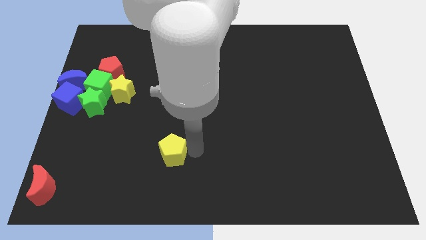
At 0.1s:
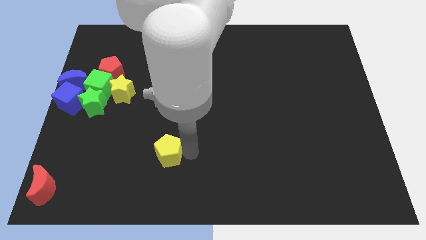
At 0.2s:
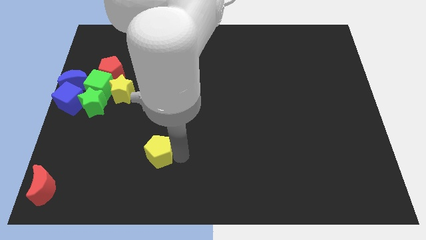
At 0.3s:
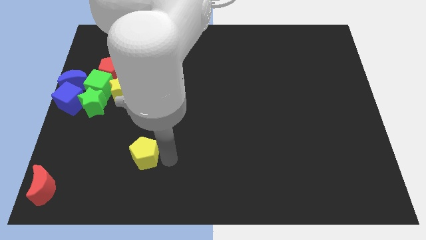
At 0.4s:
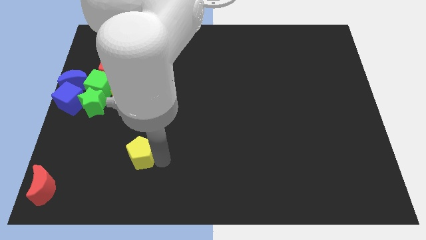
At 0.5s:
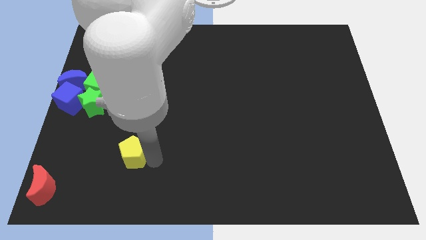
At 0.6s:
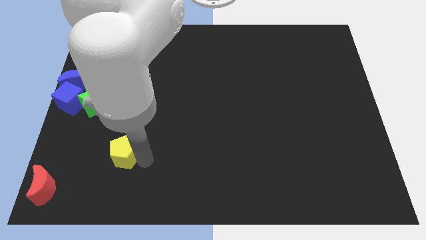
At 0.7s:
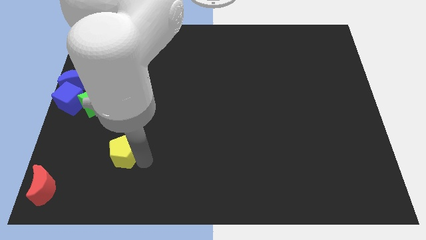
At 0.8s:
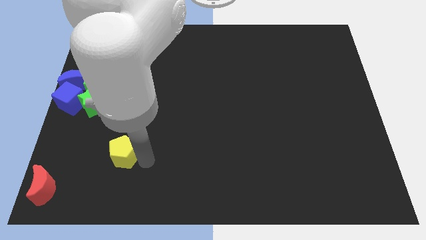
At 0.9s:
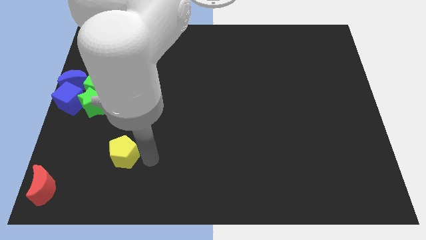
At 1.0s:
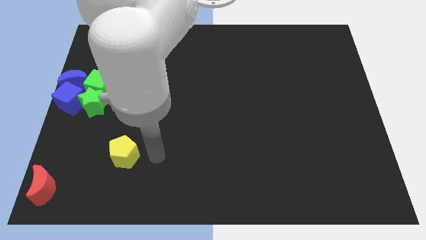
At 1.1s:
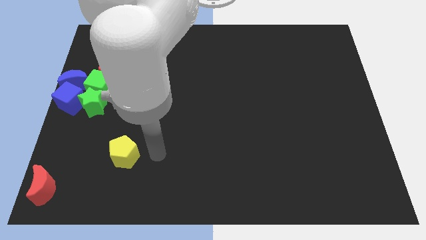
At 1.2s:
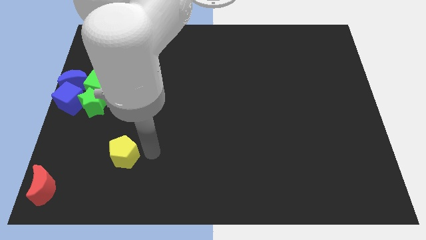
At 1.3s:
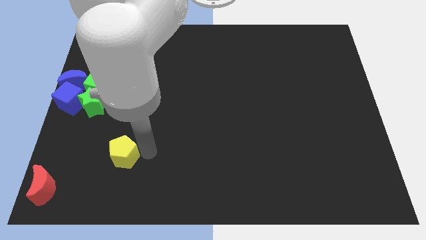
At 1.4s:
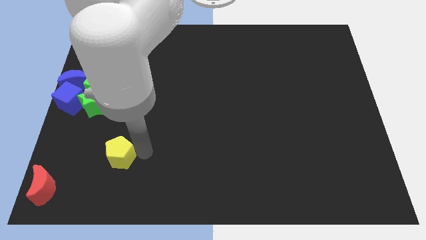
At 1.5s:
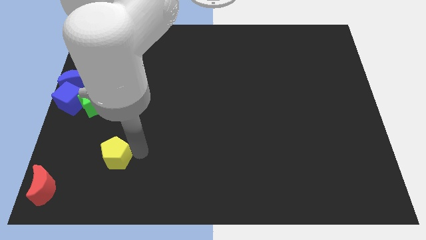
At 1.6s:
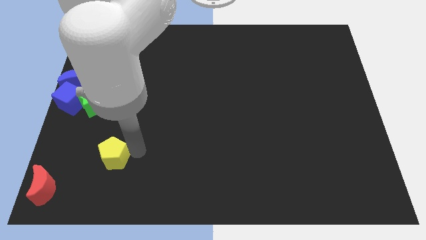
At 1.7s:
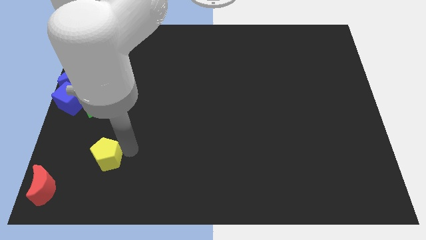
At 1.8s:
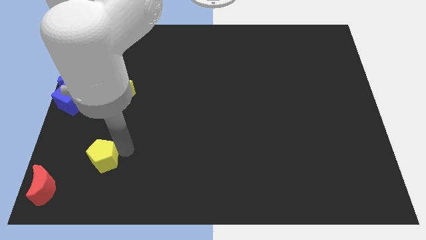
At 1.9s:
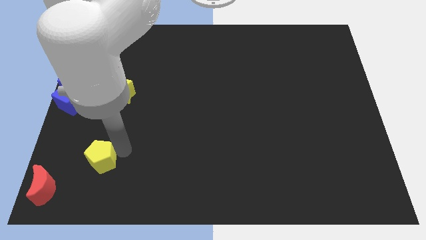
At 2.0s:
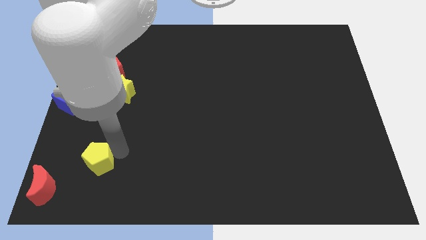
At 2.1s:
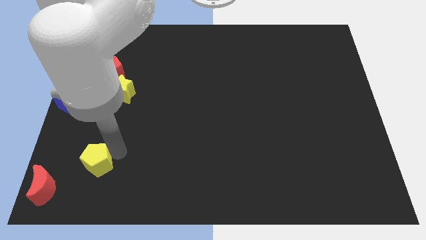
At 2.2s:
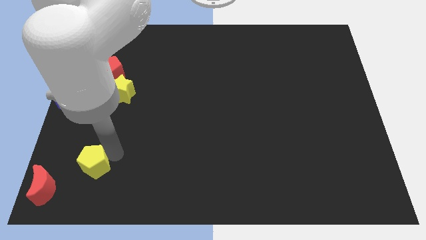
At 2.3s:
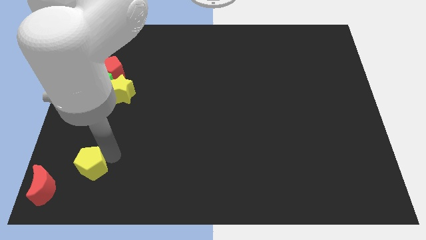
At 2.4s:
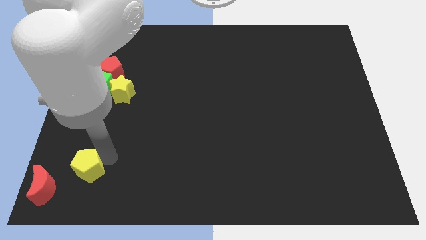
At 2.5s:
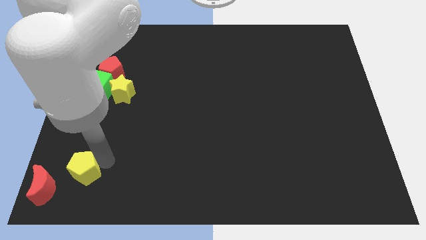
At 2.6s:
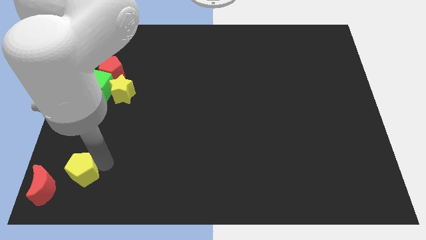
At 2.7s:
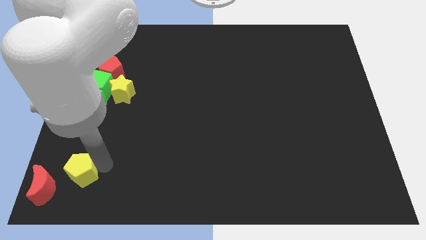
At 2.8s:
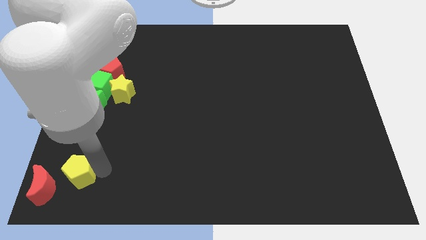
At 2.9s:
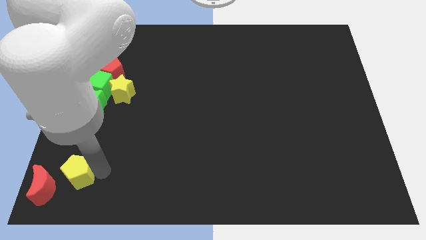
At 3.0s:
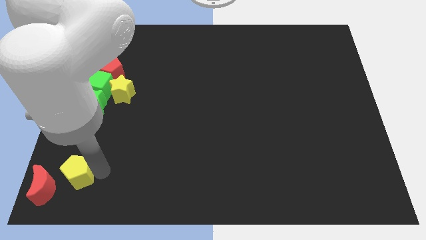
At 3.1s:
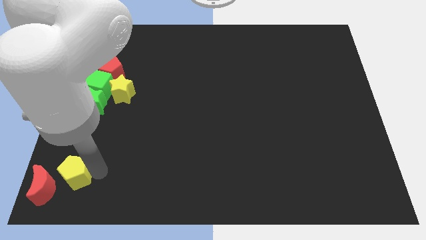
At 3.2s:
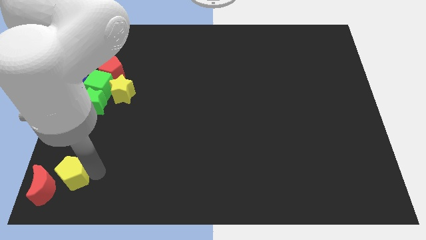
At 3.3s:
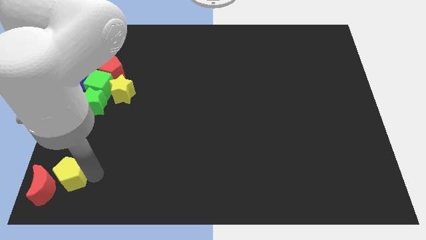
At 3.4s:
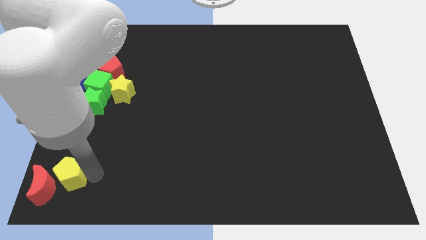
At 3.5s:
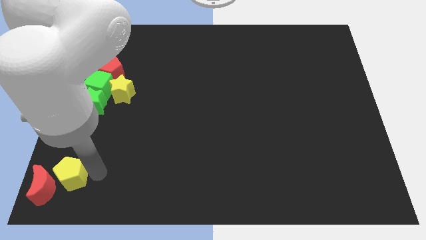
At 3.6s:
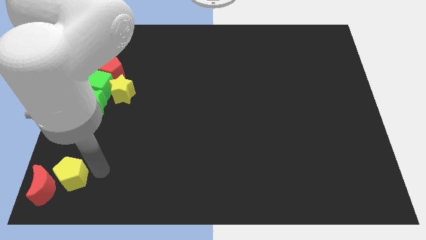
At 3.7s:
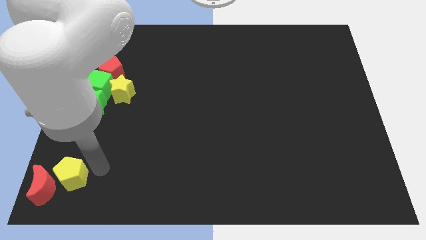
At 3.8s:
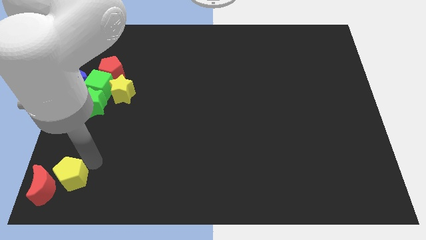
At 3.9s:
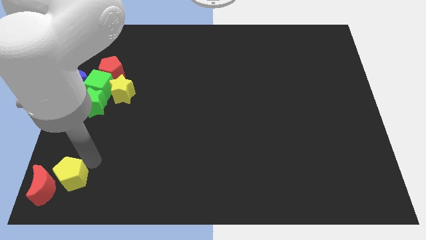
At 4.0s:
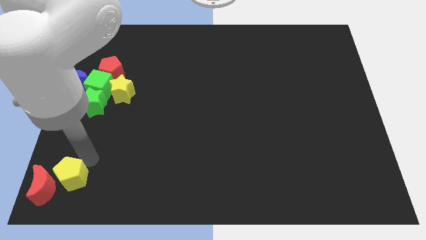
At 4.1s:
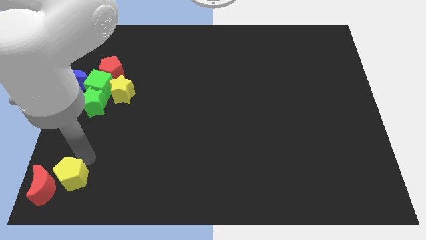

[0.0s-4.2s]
push the yellow pentagon to the right of the red crescent

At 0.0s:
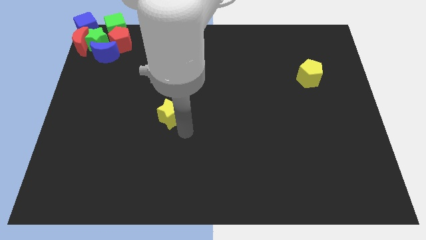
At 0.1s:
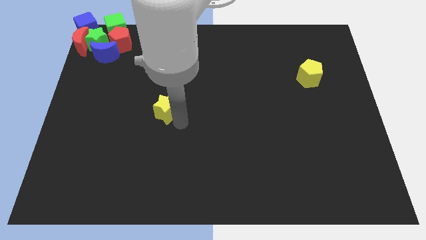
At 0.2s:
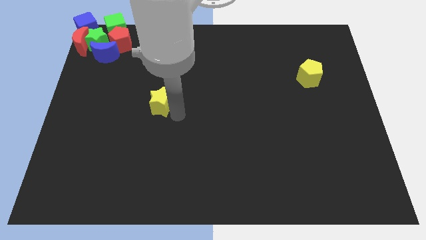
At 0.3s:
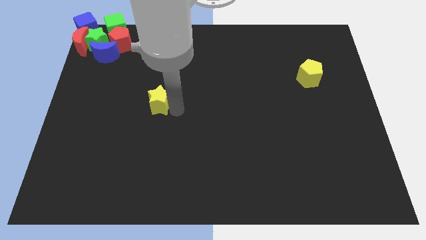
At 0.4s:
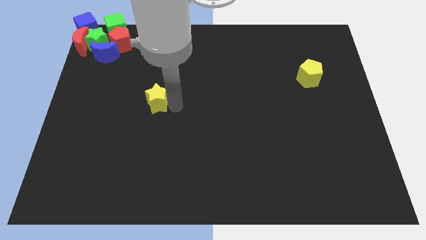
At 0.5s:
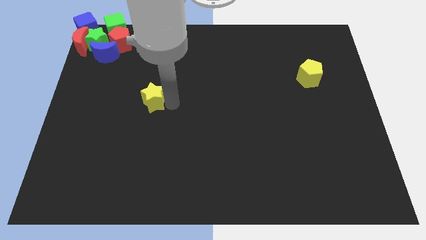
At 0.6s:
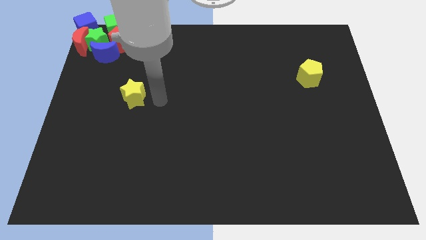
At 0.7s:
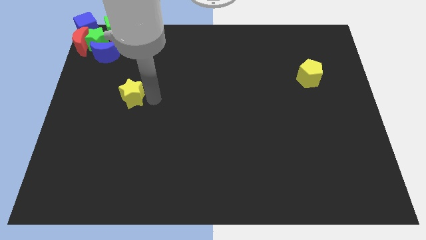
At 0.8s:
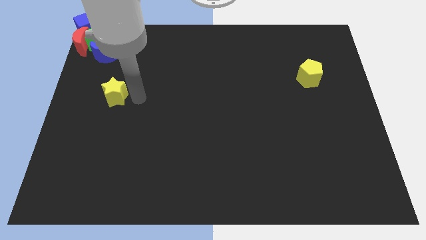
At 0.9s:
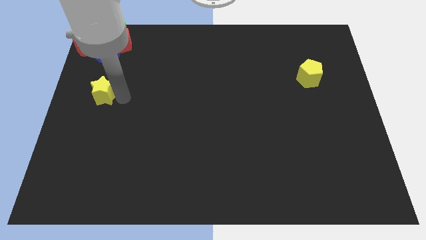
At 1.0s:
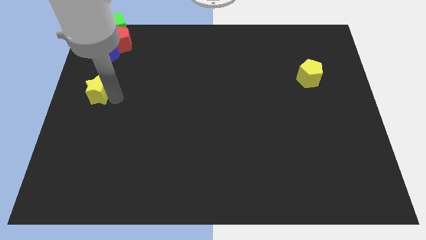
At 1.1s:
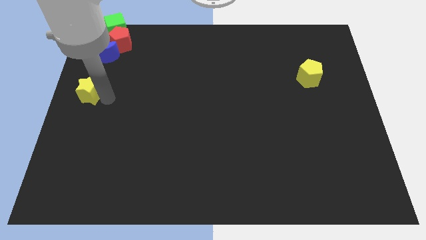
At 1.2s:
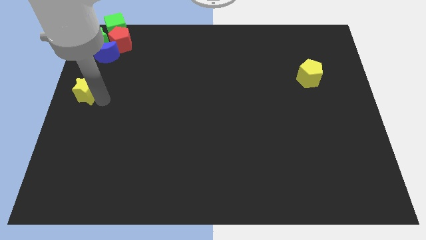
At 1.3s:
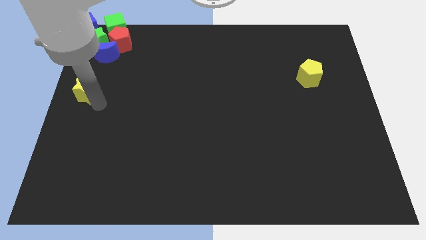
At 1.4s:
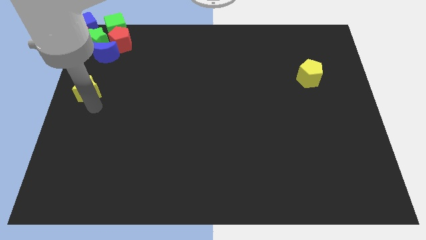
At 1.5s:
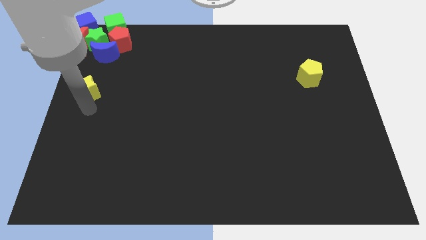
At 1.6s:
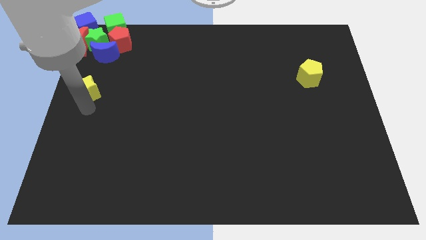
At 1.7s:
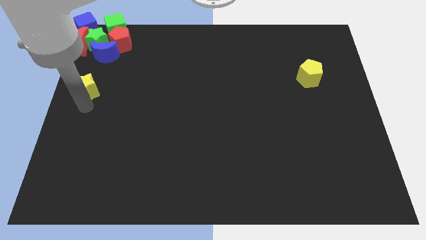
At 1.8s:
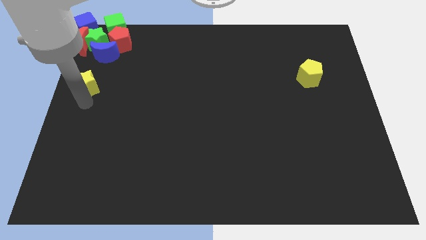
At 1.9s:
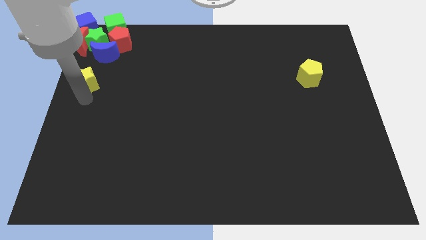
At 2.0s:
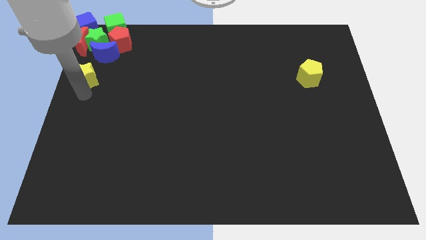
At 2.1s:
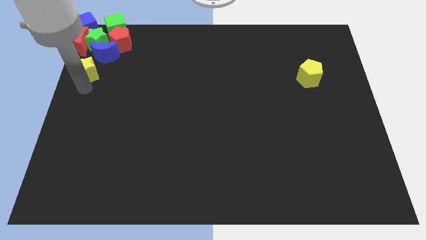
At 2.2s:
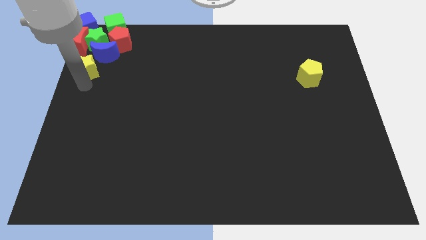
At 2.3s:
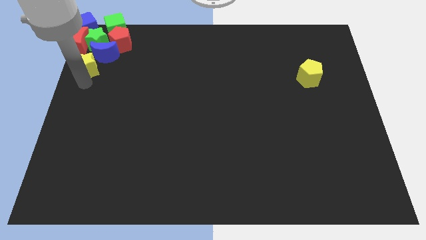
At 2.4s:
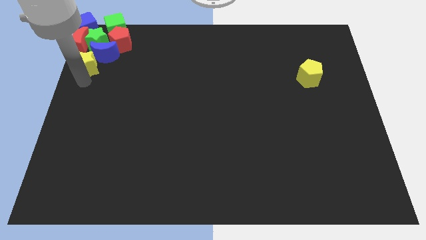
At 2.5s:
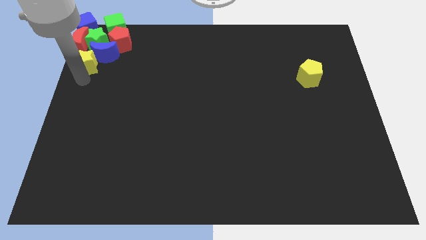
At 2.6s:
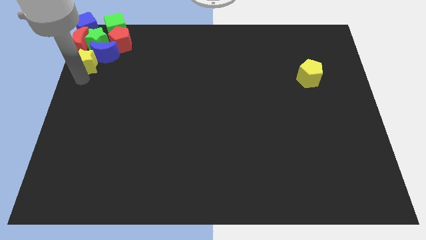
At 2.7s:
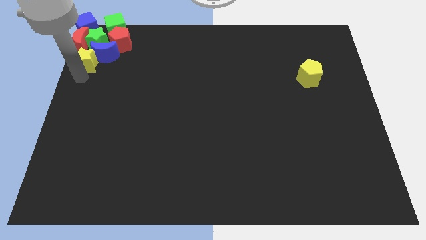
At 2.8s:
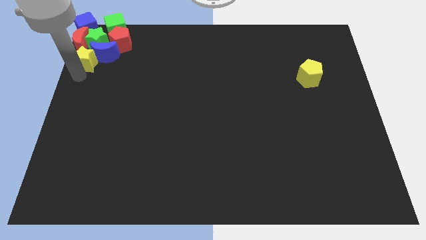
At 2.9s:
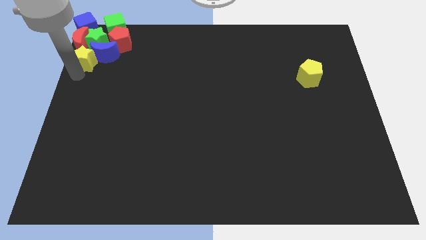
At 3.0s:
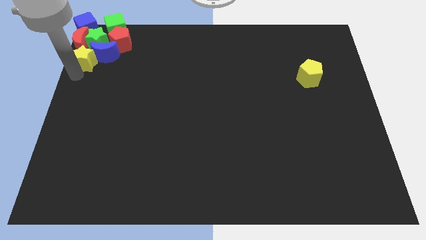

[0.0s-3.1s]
drag the yellow star into the group of objects

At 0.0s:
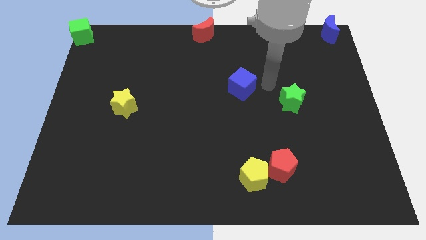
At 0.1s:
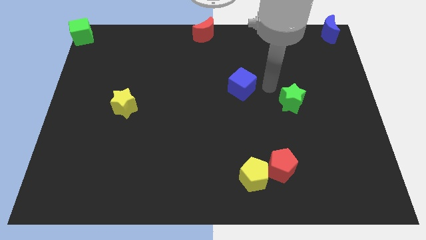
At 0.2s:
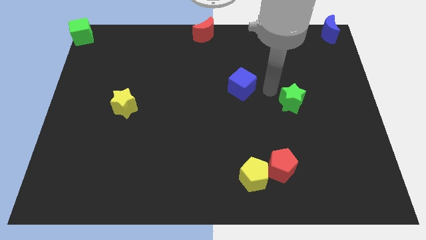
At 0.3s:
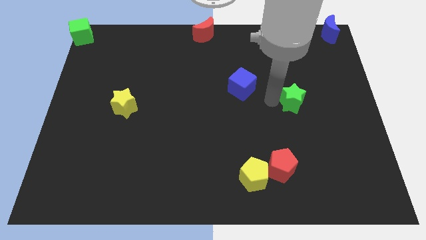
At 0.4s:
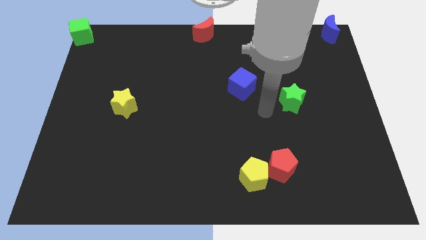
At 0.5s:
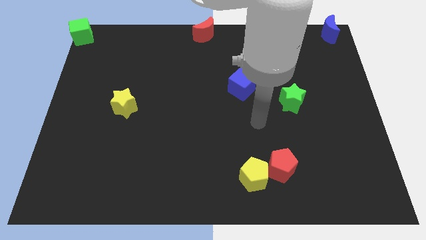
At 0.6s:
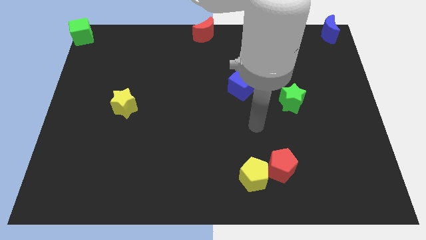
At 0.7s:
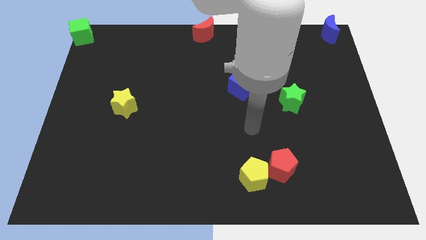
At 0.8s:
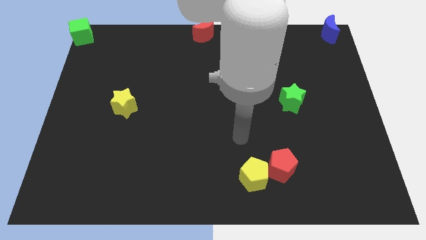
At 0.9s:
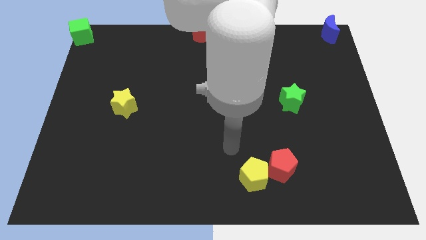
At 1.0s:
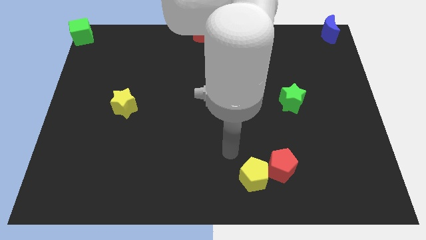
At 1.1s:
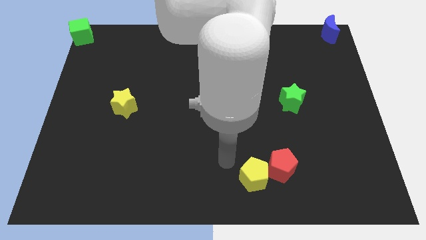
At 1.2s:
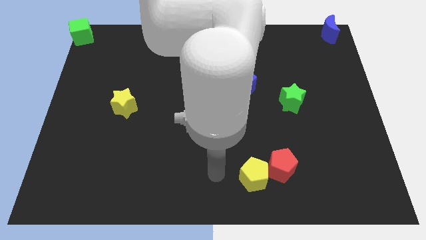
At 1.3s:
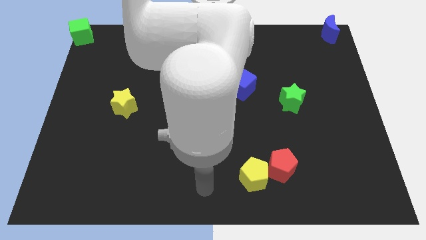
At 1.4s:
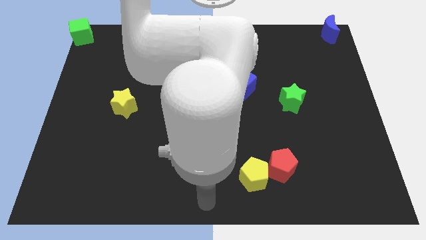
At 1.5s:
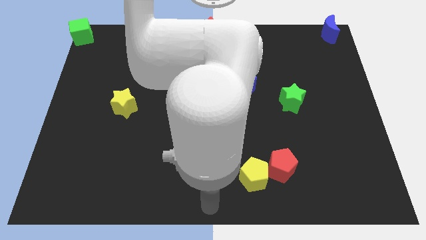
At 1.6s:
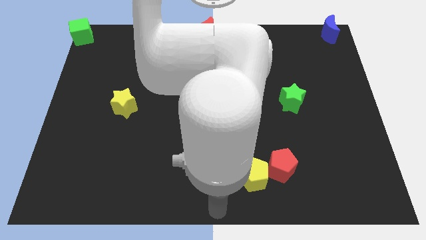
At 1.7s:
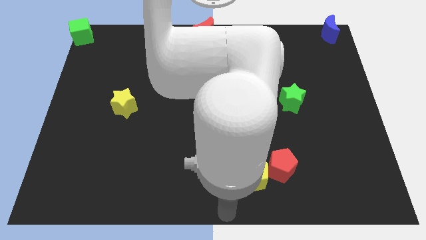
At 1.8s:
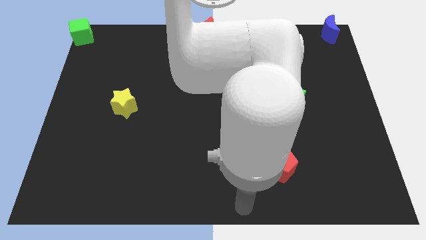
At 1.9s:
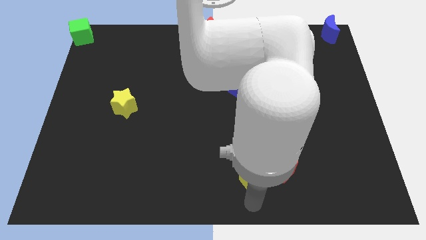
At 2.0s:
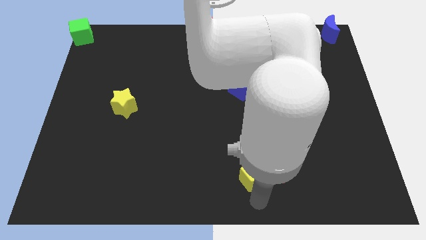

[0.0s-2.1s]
point the arm below the yellow pentagon
